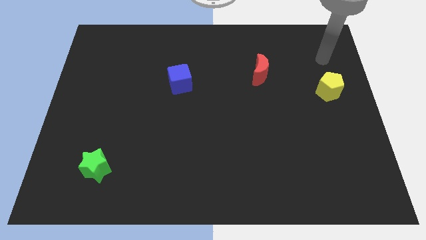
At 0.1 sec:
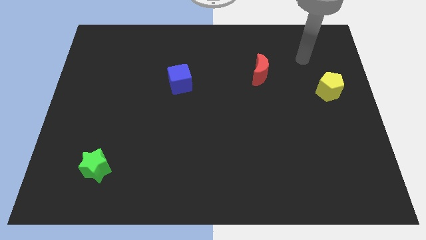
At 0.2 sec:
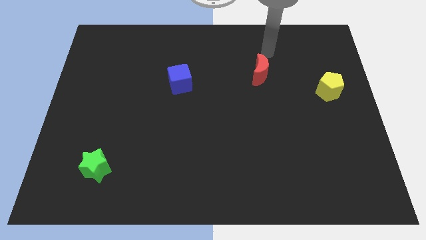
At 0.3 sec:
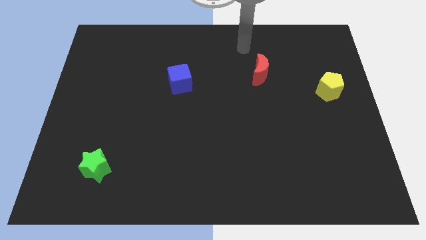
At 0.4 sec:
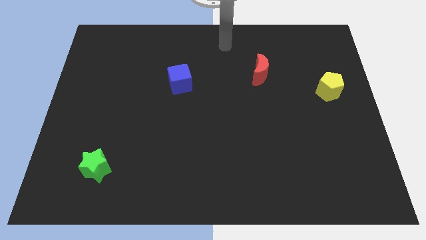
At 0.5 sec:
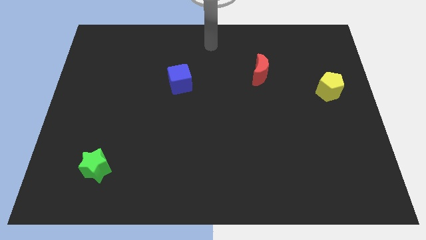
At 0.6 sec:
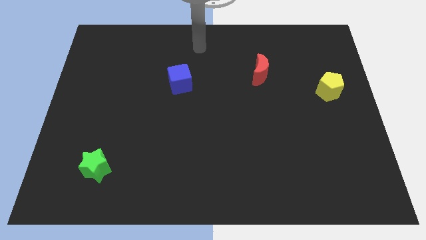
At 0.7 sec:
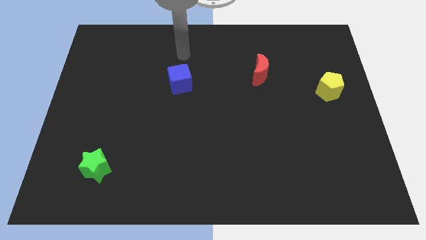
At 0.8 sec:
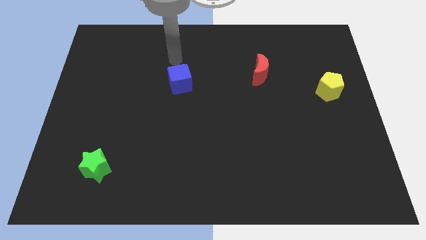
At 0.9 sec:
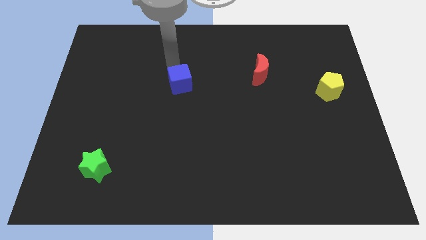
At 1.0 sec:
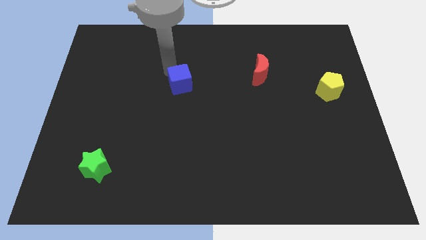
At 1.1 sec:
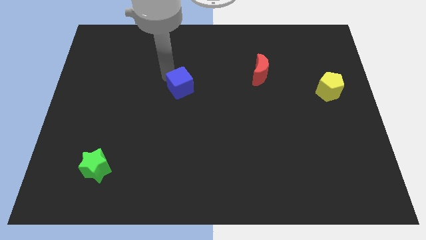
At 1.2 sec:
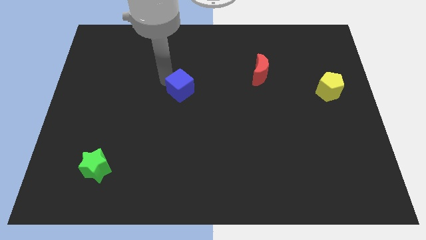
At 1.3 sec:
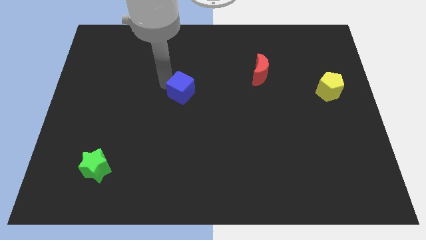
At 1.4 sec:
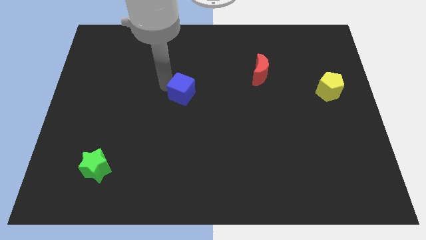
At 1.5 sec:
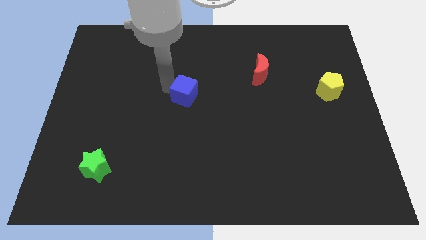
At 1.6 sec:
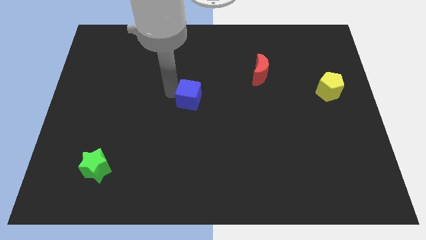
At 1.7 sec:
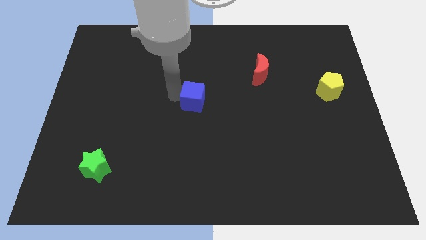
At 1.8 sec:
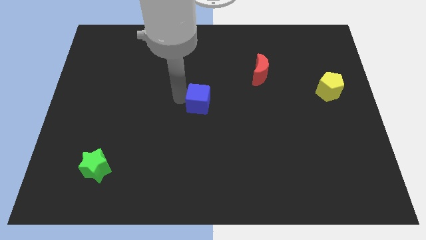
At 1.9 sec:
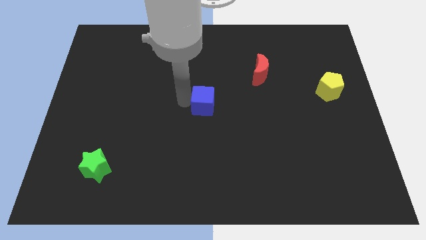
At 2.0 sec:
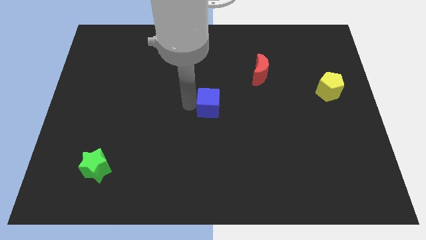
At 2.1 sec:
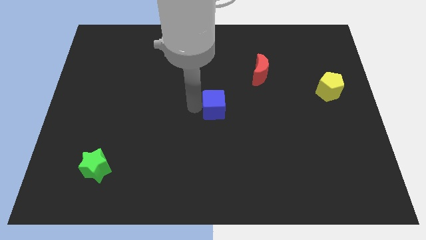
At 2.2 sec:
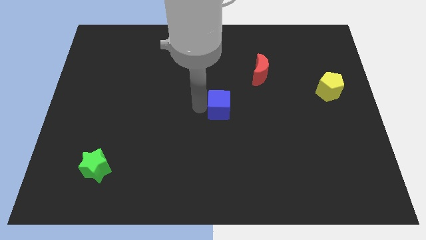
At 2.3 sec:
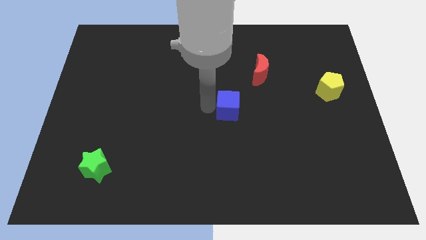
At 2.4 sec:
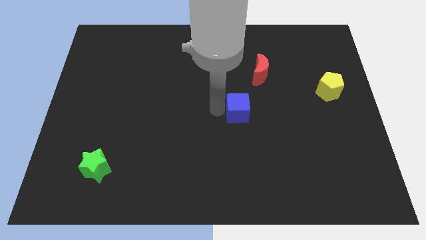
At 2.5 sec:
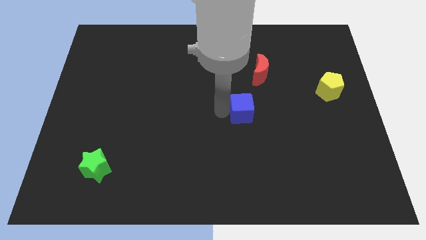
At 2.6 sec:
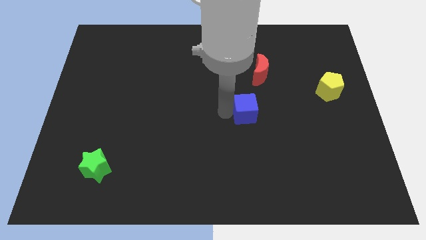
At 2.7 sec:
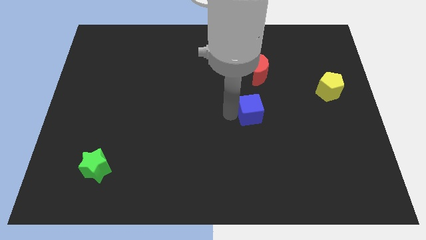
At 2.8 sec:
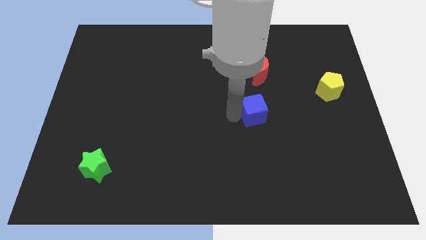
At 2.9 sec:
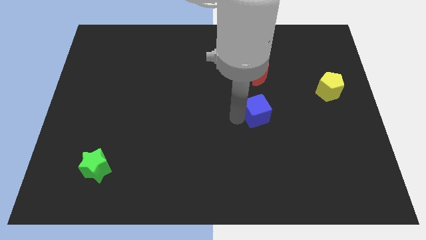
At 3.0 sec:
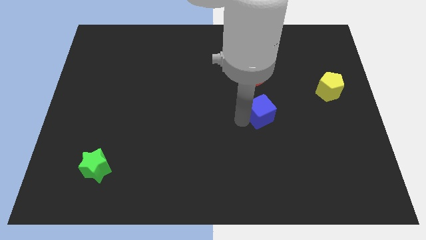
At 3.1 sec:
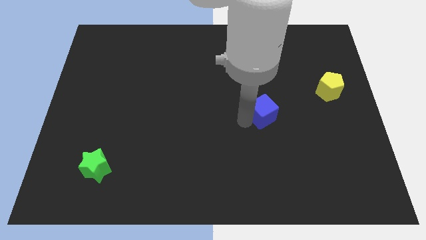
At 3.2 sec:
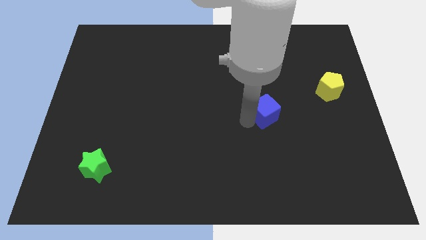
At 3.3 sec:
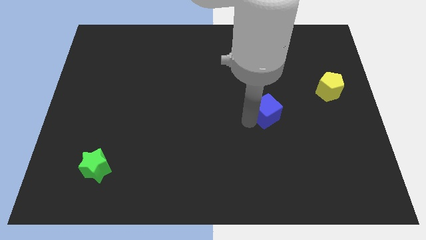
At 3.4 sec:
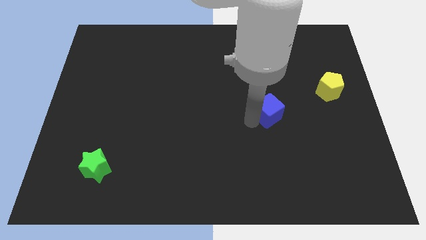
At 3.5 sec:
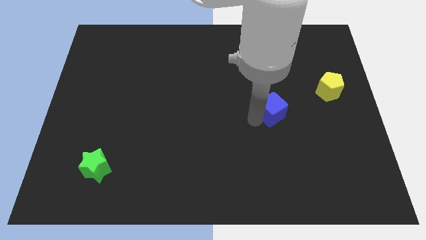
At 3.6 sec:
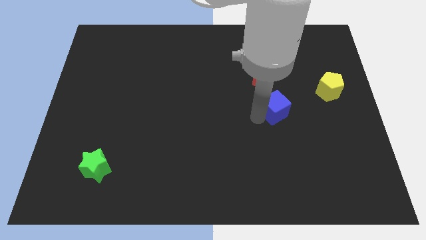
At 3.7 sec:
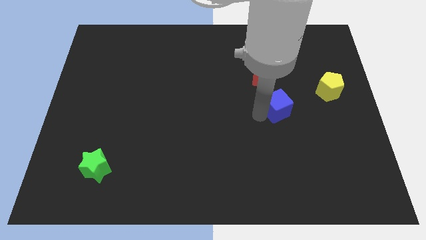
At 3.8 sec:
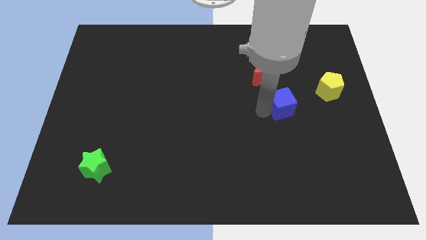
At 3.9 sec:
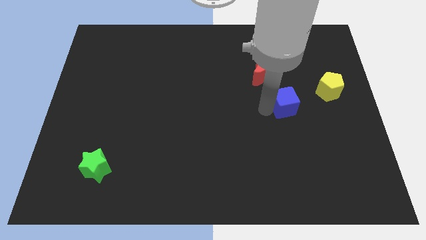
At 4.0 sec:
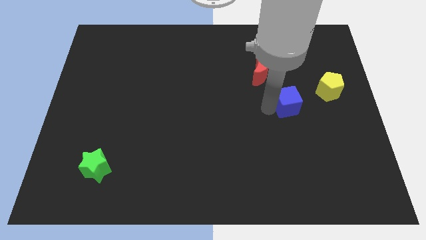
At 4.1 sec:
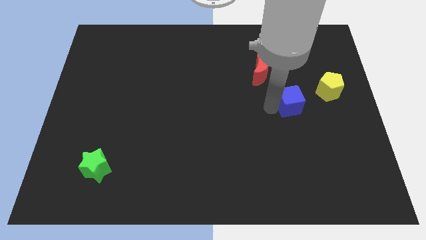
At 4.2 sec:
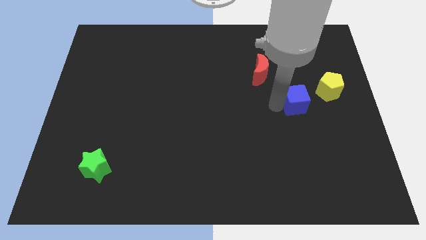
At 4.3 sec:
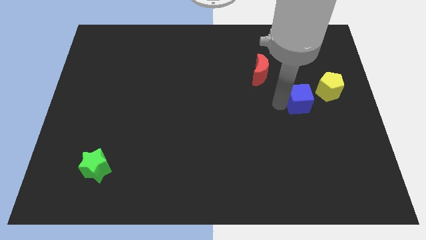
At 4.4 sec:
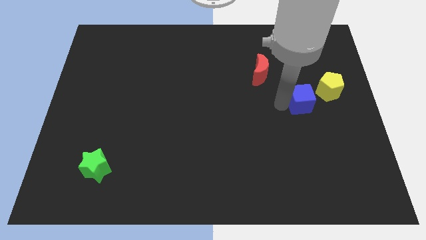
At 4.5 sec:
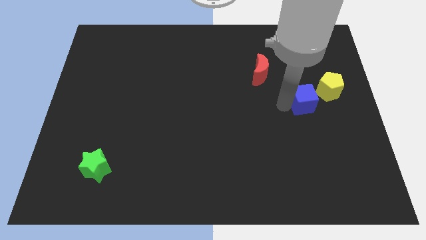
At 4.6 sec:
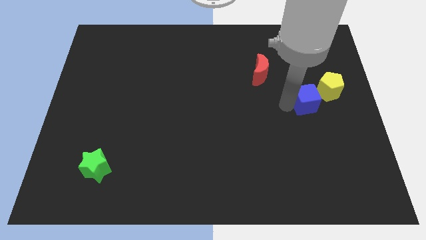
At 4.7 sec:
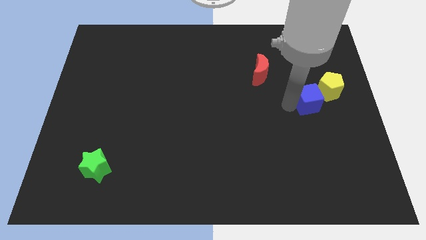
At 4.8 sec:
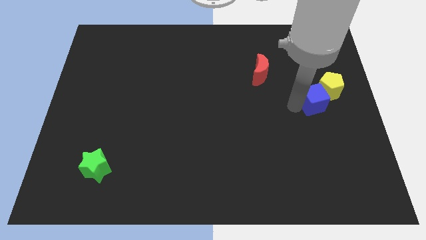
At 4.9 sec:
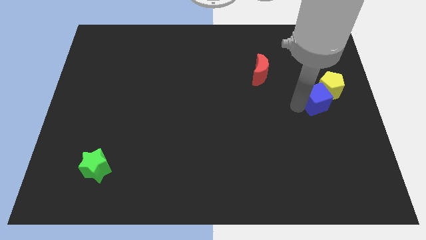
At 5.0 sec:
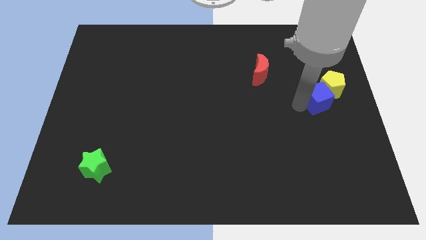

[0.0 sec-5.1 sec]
slide the blue cube to the yellow pentagon

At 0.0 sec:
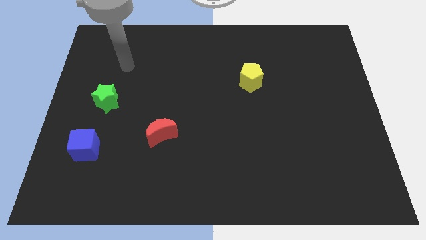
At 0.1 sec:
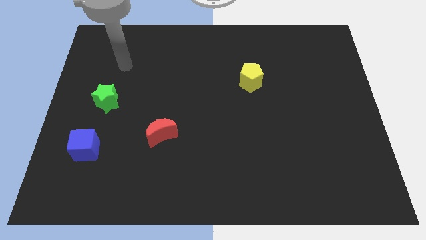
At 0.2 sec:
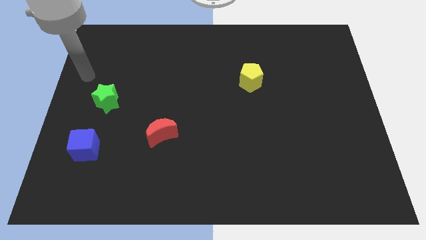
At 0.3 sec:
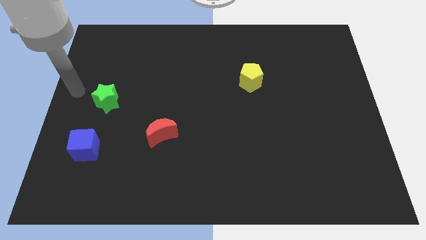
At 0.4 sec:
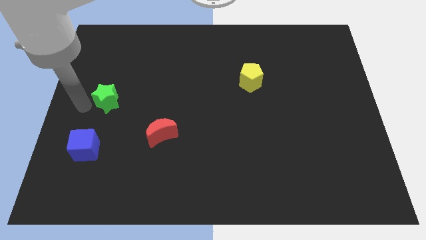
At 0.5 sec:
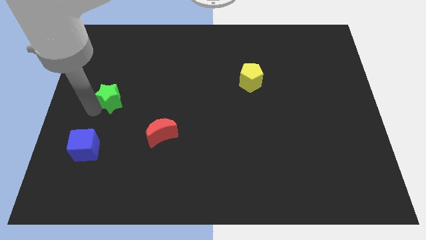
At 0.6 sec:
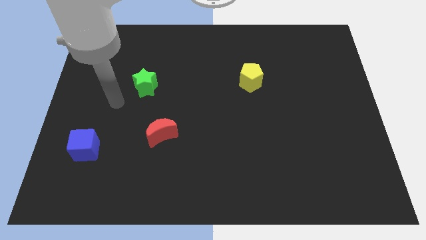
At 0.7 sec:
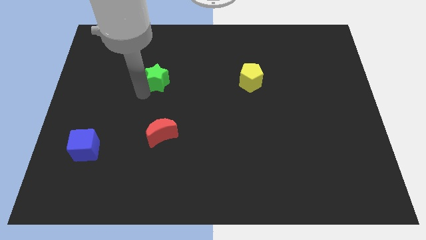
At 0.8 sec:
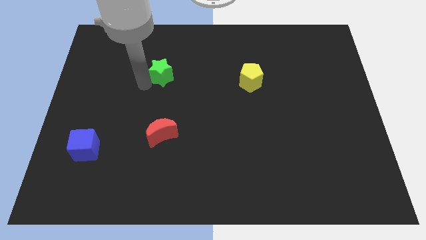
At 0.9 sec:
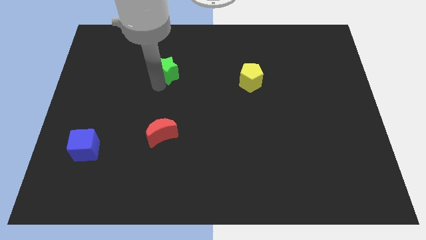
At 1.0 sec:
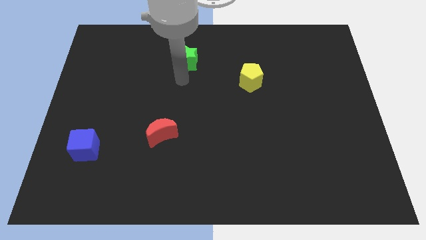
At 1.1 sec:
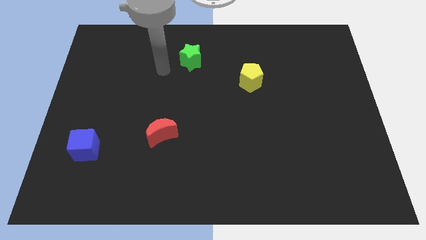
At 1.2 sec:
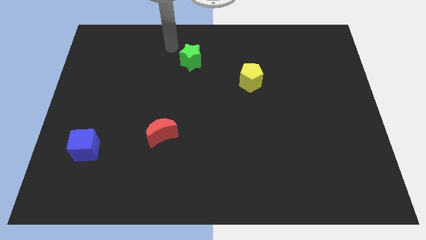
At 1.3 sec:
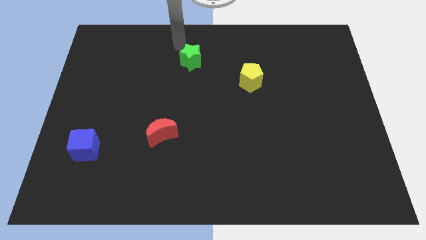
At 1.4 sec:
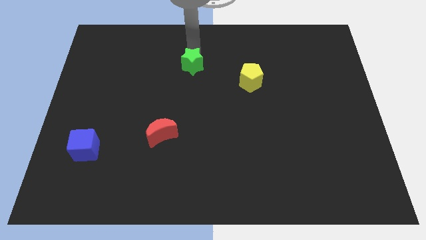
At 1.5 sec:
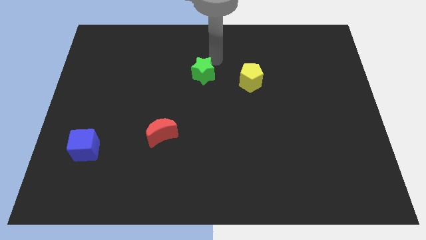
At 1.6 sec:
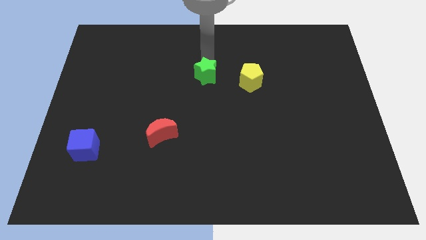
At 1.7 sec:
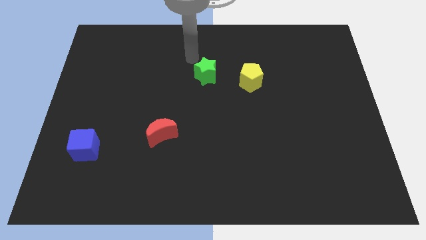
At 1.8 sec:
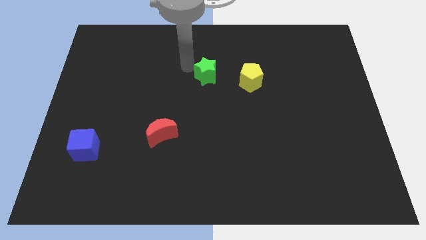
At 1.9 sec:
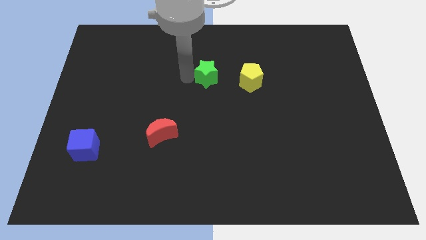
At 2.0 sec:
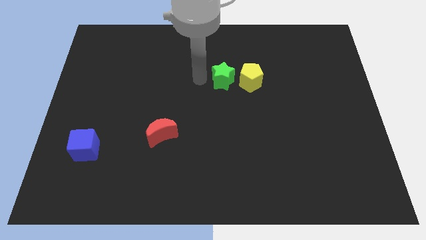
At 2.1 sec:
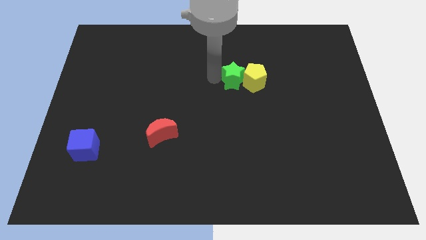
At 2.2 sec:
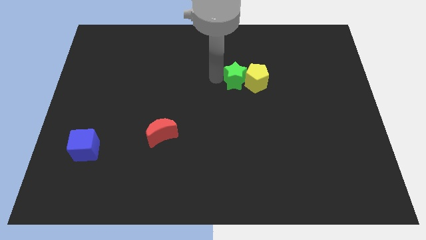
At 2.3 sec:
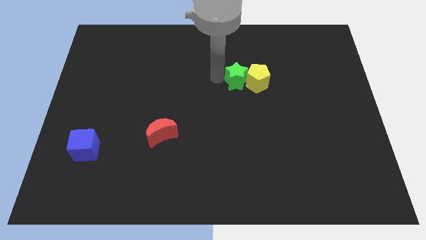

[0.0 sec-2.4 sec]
move the green star to the yellow block

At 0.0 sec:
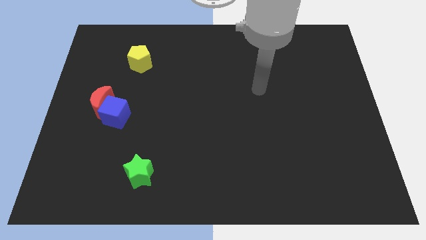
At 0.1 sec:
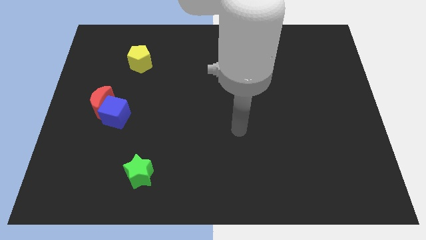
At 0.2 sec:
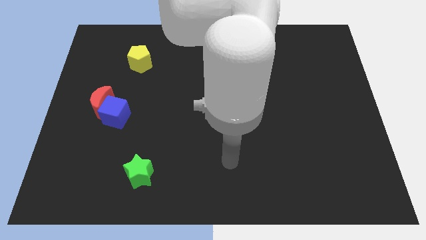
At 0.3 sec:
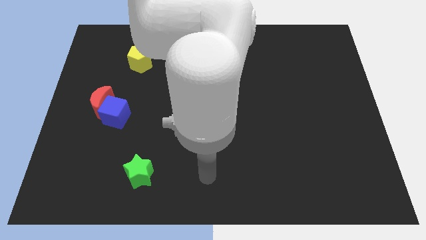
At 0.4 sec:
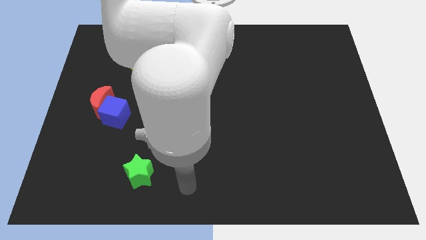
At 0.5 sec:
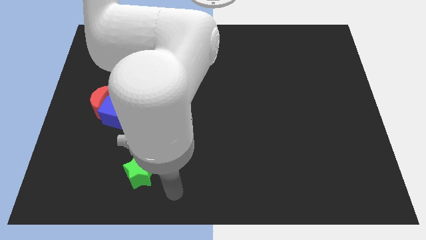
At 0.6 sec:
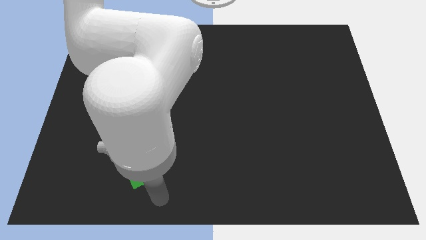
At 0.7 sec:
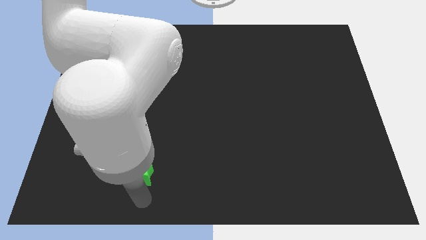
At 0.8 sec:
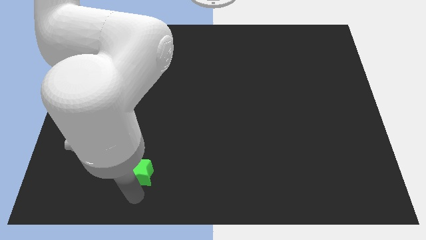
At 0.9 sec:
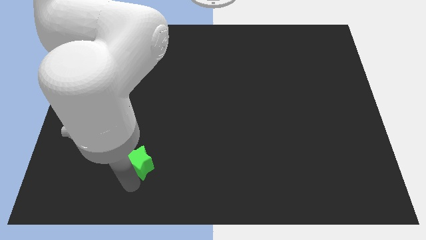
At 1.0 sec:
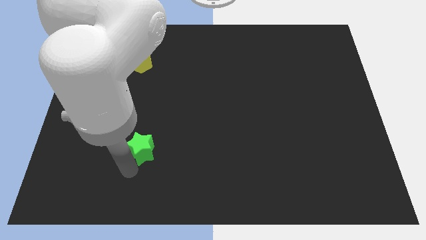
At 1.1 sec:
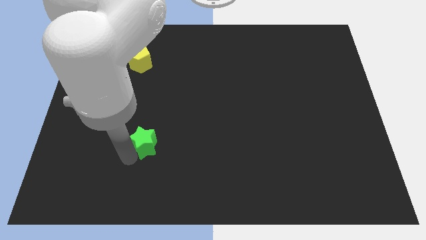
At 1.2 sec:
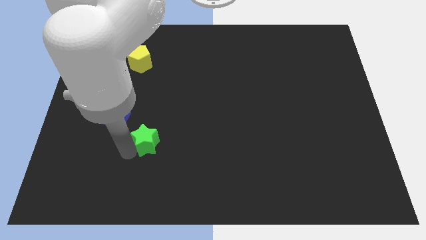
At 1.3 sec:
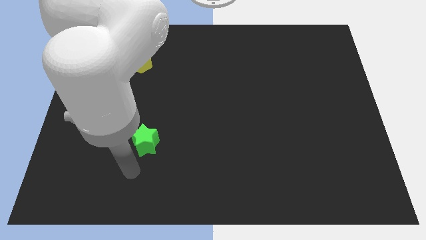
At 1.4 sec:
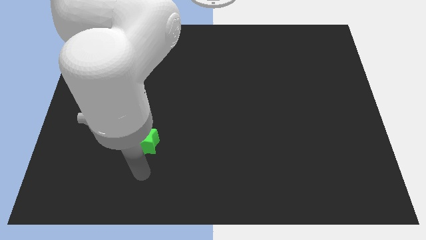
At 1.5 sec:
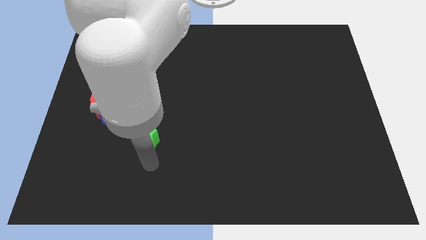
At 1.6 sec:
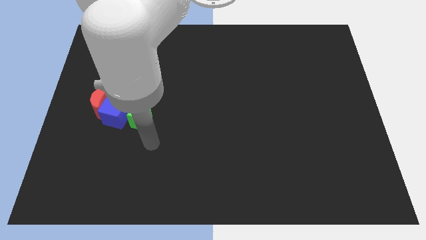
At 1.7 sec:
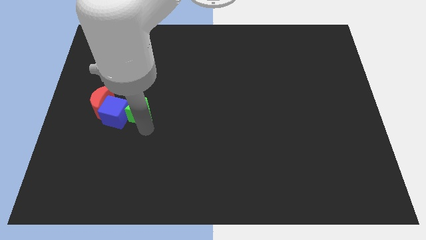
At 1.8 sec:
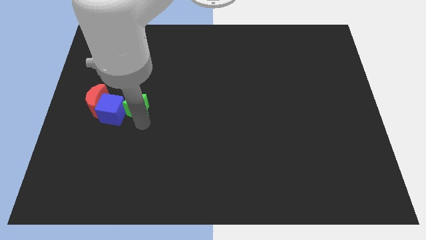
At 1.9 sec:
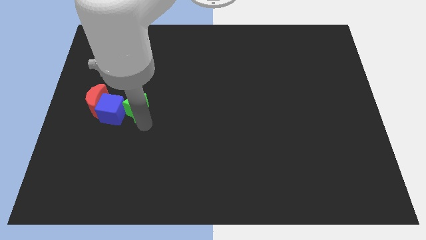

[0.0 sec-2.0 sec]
push the star close to the blue block
